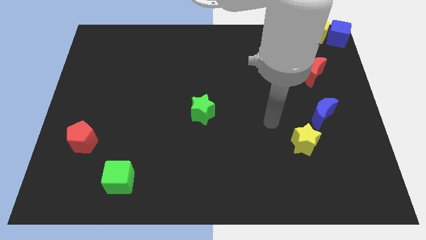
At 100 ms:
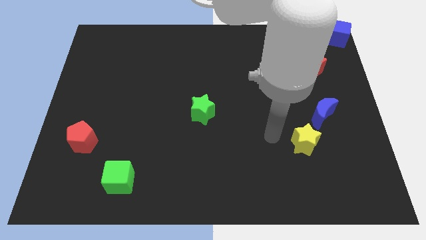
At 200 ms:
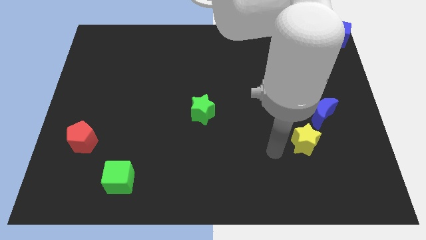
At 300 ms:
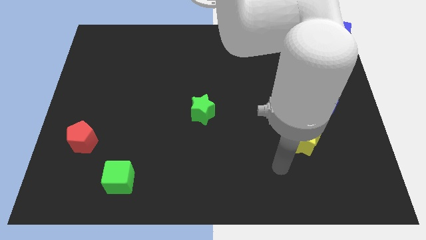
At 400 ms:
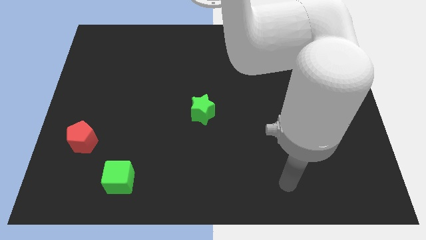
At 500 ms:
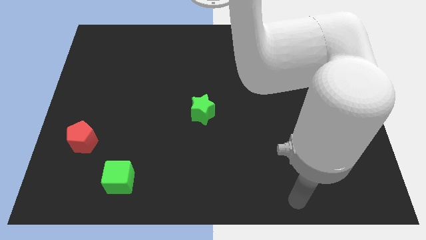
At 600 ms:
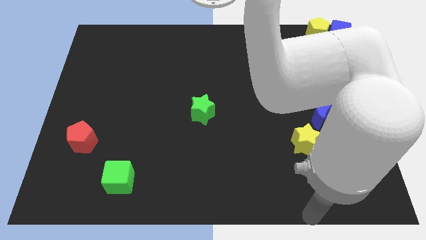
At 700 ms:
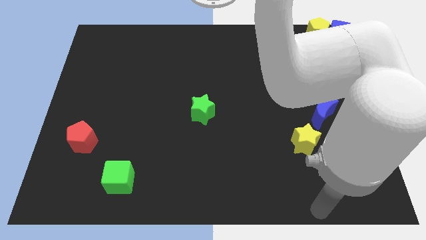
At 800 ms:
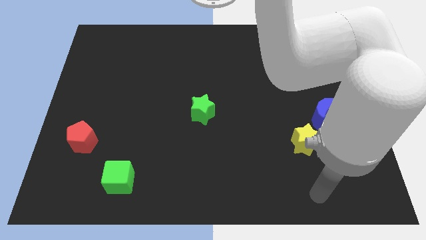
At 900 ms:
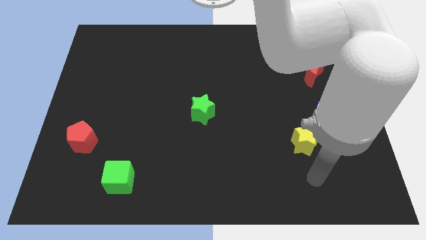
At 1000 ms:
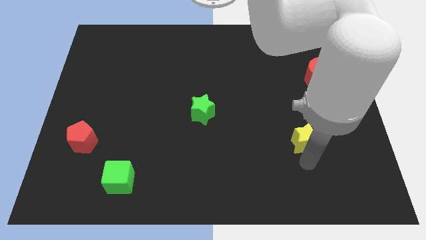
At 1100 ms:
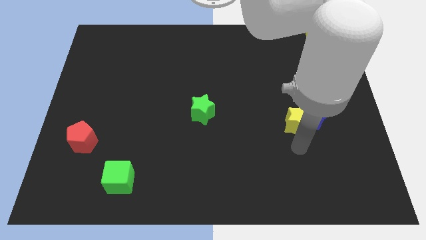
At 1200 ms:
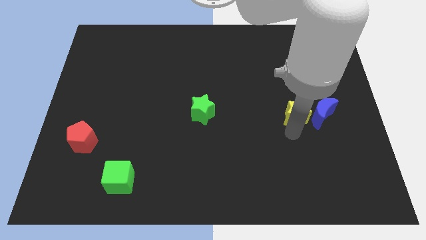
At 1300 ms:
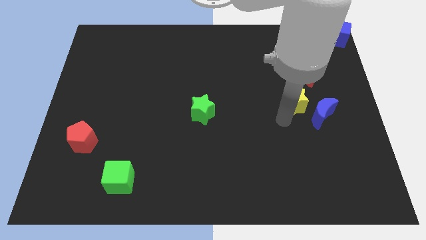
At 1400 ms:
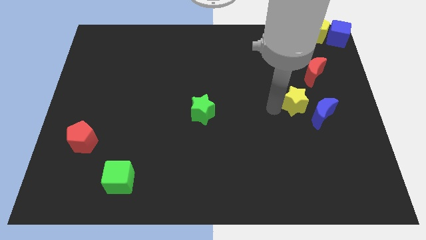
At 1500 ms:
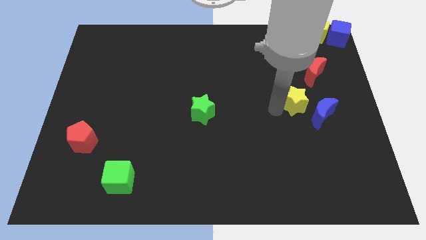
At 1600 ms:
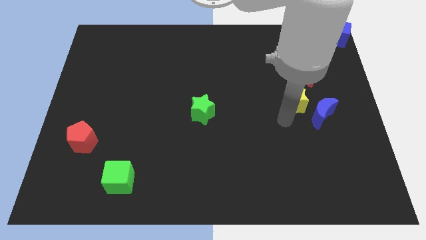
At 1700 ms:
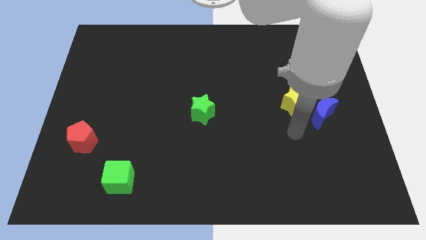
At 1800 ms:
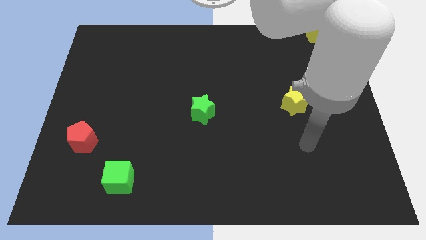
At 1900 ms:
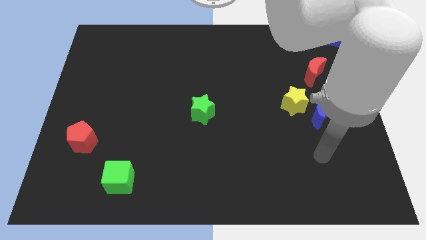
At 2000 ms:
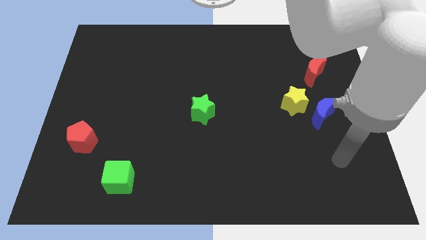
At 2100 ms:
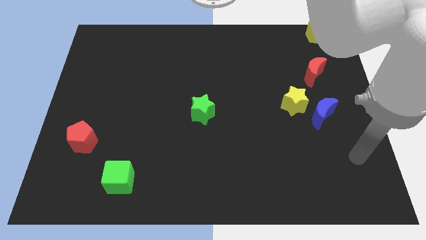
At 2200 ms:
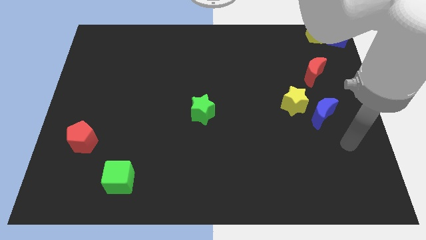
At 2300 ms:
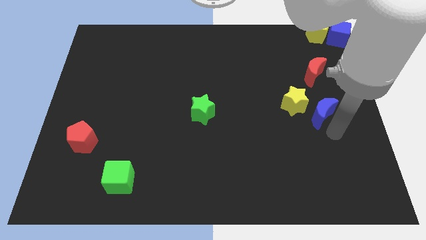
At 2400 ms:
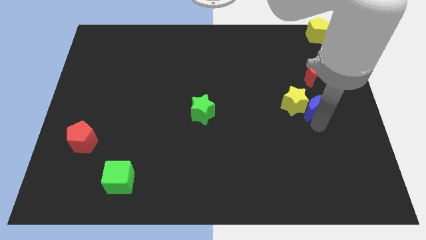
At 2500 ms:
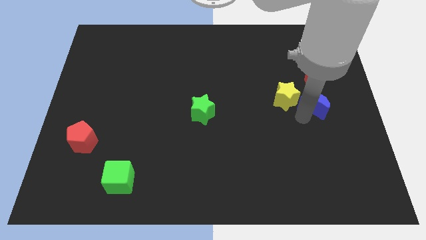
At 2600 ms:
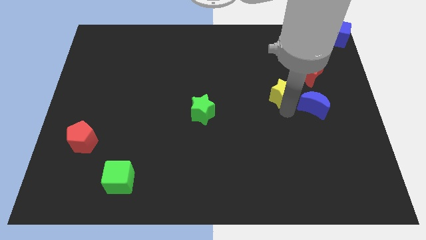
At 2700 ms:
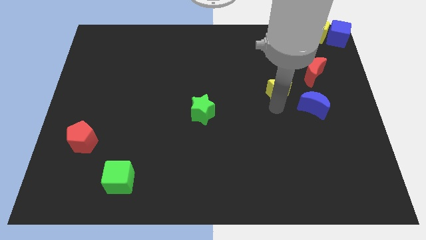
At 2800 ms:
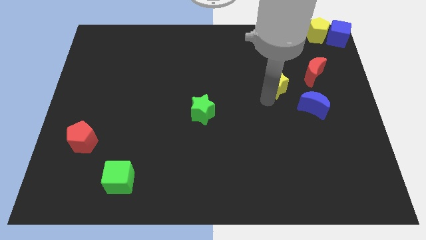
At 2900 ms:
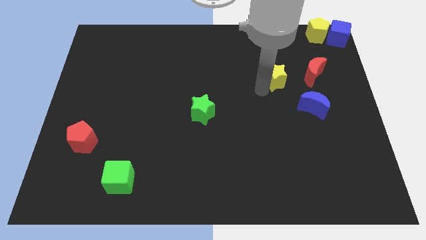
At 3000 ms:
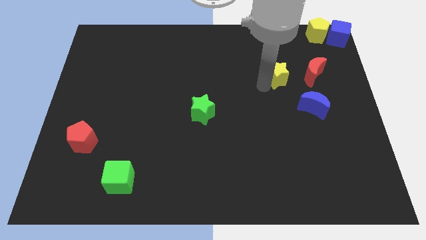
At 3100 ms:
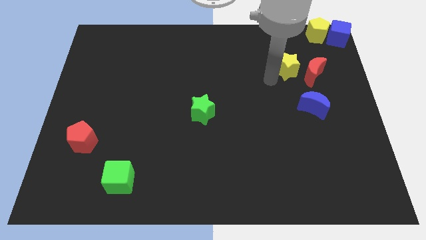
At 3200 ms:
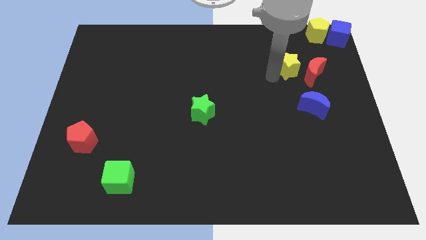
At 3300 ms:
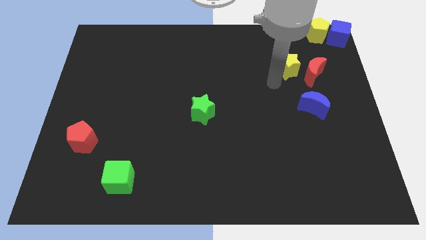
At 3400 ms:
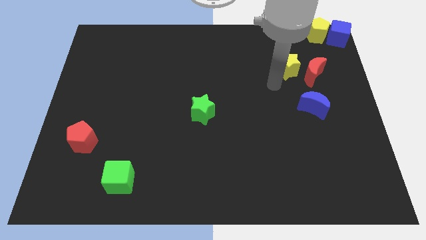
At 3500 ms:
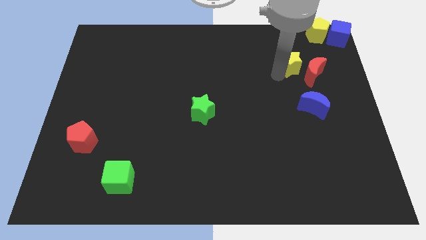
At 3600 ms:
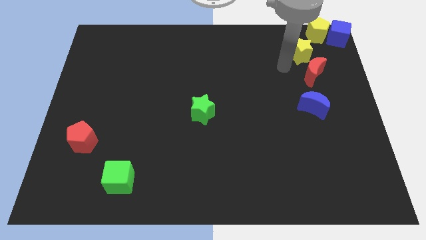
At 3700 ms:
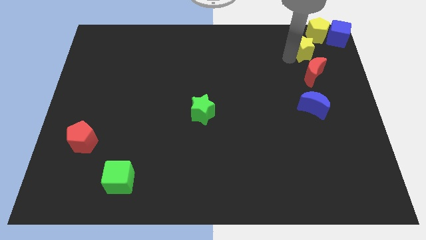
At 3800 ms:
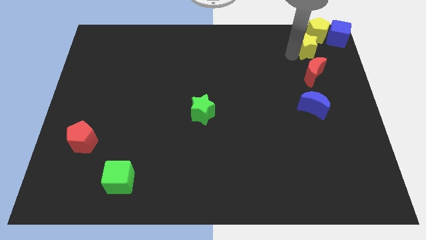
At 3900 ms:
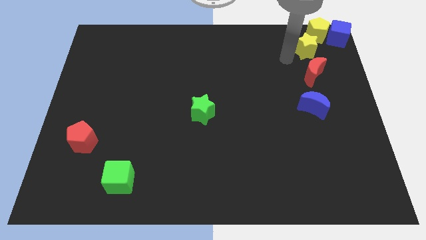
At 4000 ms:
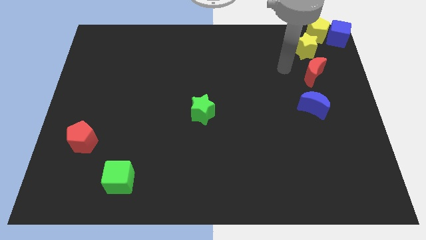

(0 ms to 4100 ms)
move yellow star towards yellow pentagon

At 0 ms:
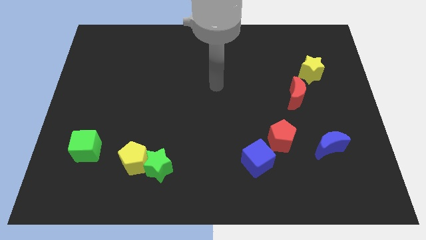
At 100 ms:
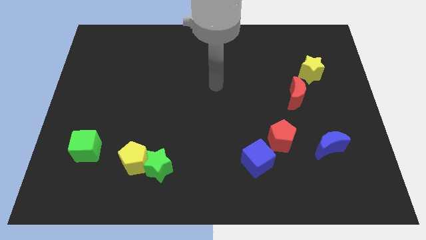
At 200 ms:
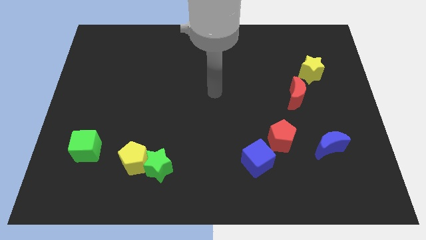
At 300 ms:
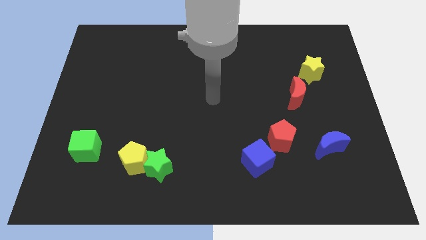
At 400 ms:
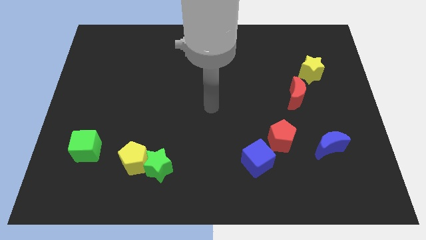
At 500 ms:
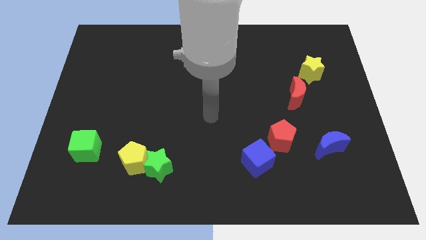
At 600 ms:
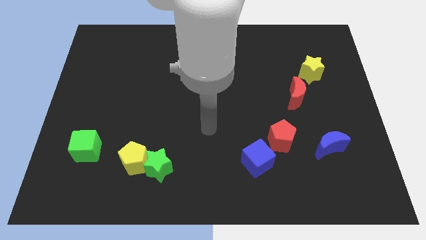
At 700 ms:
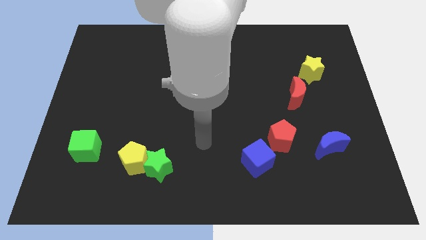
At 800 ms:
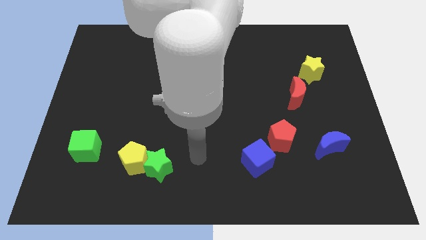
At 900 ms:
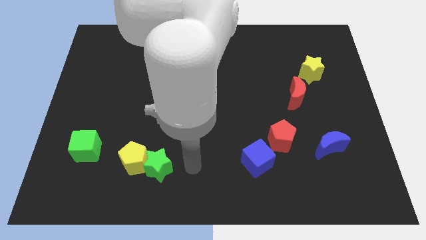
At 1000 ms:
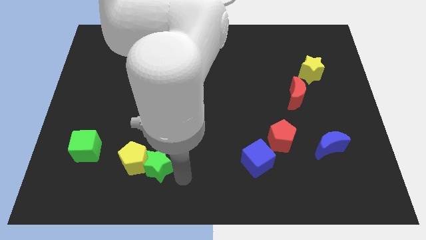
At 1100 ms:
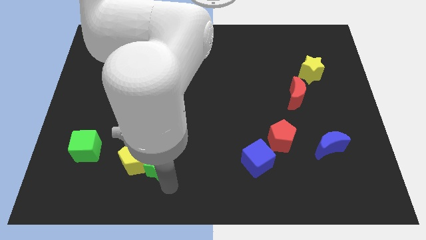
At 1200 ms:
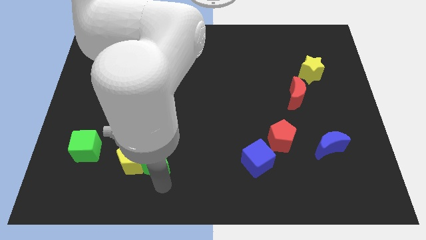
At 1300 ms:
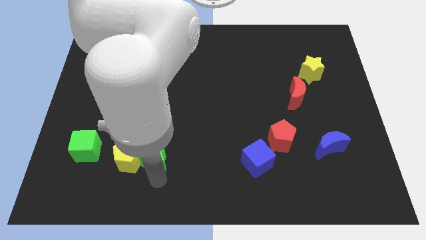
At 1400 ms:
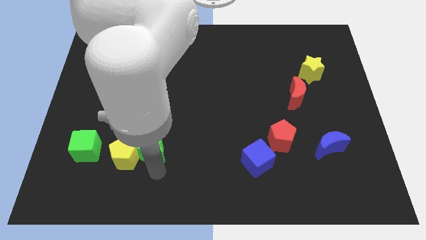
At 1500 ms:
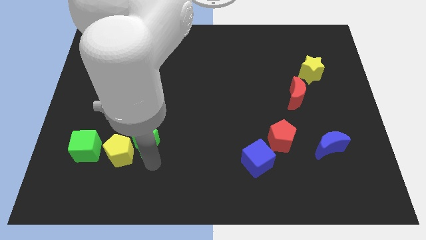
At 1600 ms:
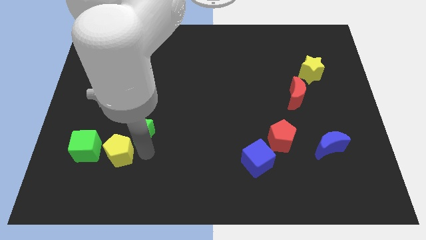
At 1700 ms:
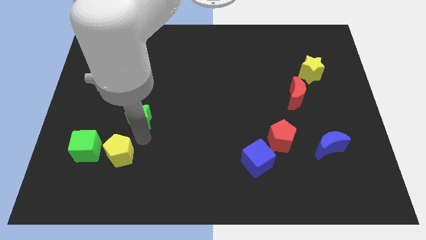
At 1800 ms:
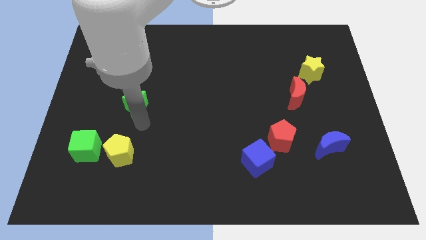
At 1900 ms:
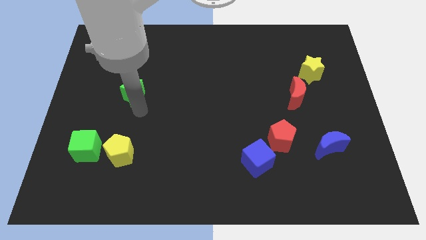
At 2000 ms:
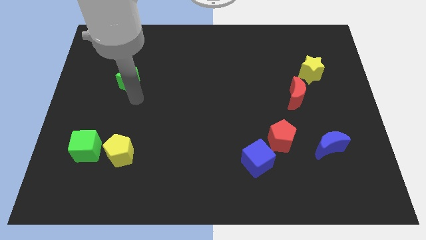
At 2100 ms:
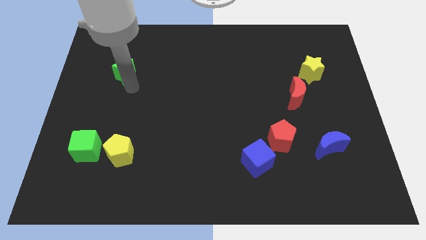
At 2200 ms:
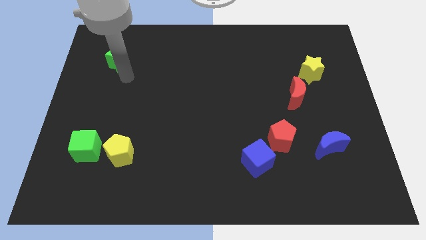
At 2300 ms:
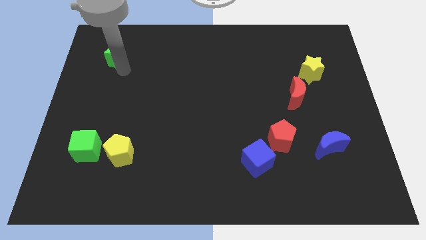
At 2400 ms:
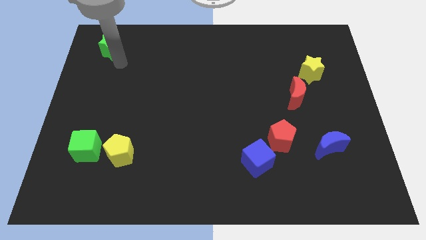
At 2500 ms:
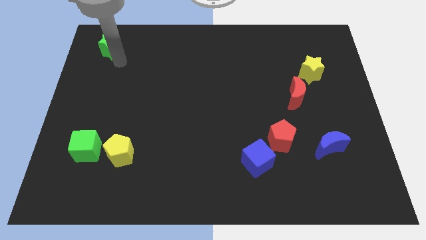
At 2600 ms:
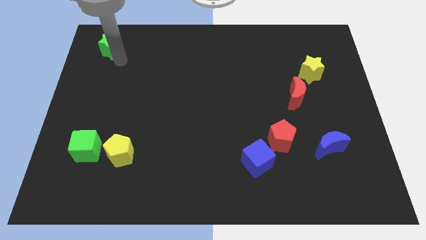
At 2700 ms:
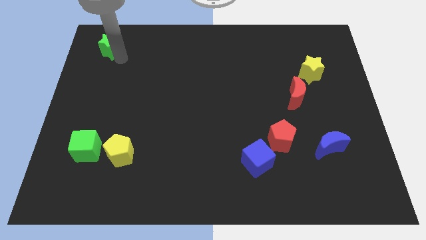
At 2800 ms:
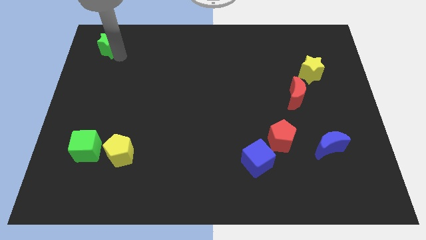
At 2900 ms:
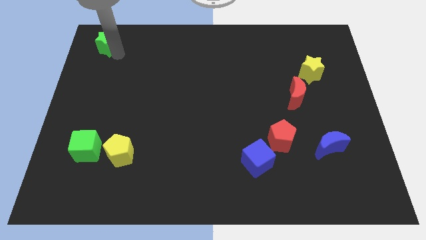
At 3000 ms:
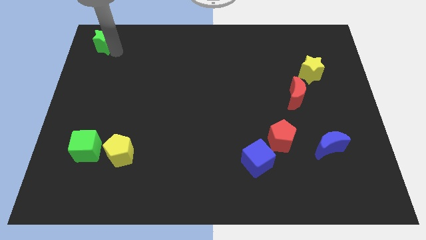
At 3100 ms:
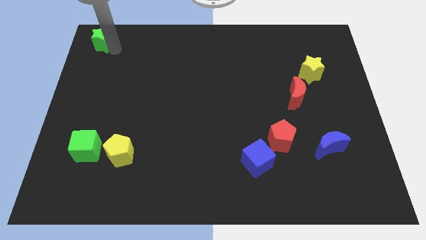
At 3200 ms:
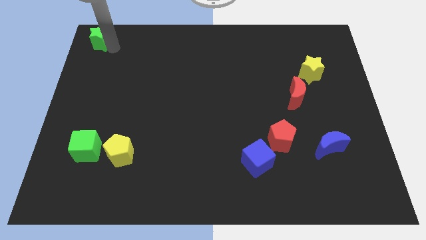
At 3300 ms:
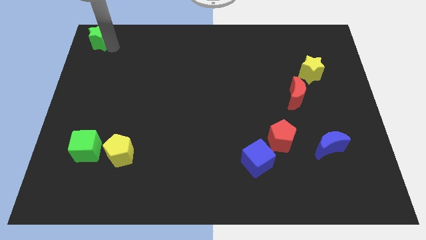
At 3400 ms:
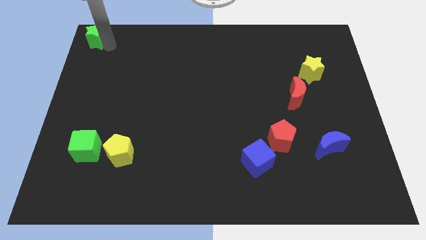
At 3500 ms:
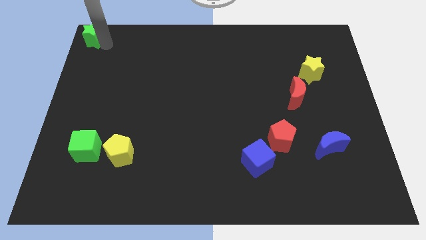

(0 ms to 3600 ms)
move green star towards top left corner of the board

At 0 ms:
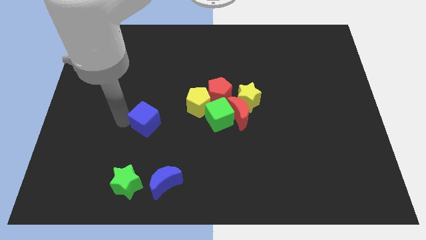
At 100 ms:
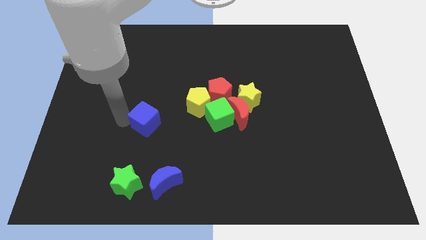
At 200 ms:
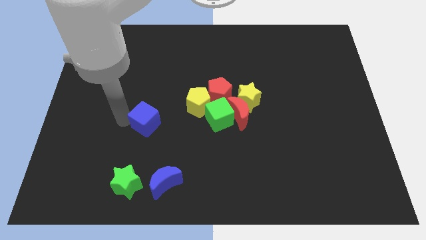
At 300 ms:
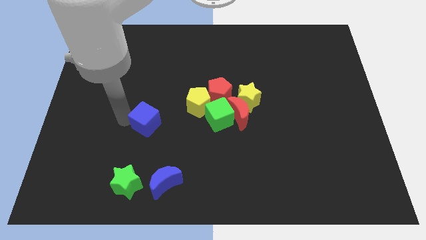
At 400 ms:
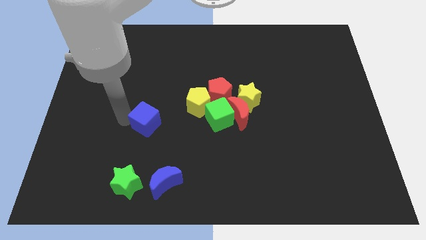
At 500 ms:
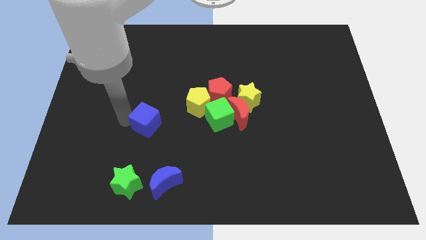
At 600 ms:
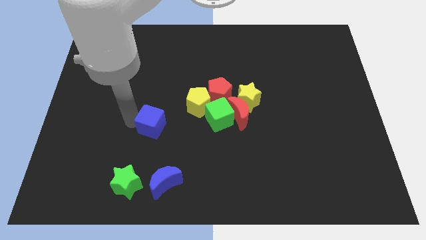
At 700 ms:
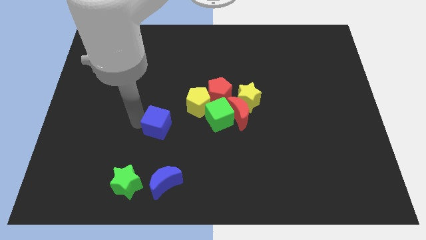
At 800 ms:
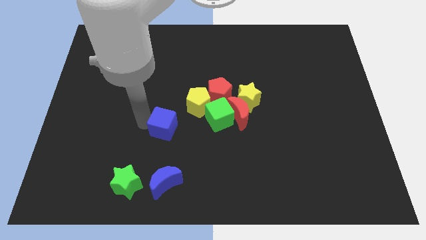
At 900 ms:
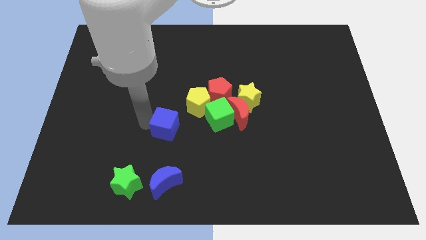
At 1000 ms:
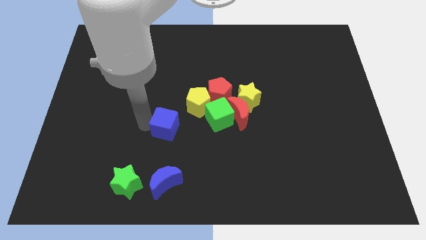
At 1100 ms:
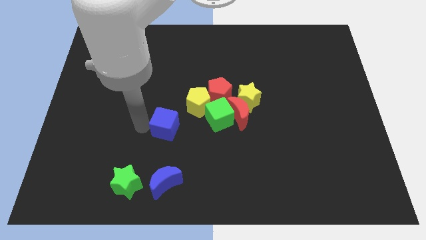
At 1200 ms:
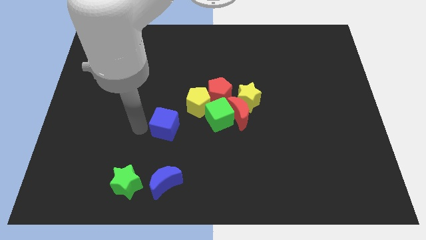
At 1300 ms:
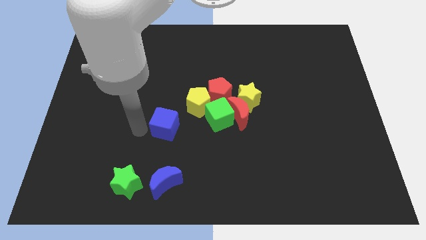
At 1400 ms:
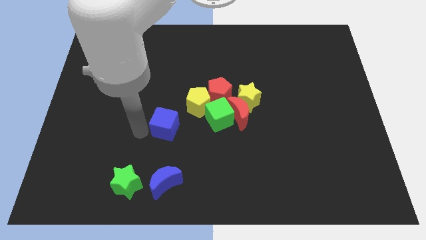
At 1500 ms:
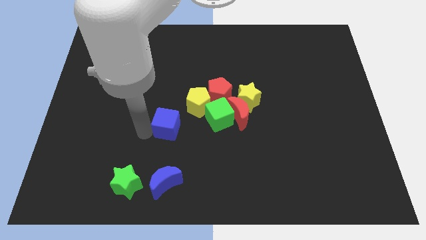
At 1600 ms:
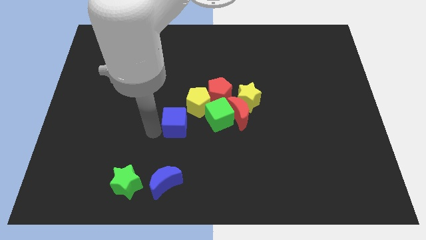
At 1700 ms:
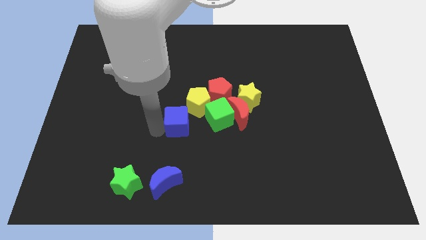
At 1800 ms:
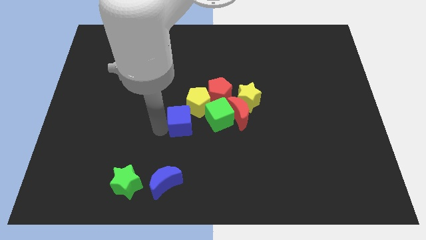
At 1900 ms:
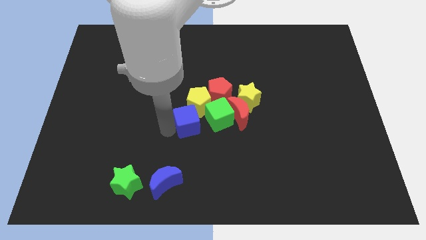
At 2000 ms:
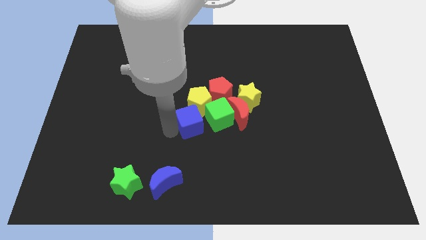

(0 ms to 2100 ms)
push the blue cube to the left of the green cube
